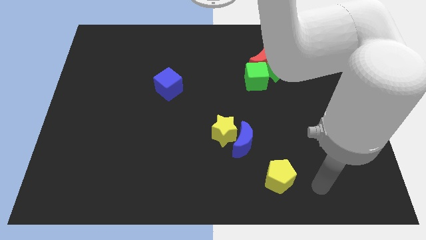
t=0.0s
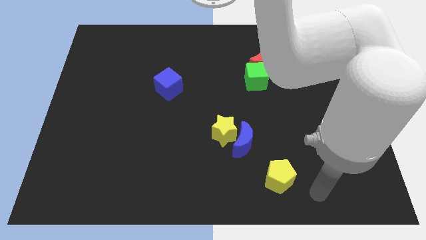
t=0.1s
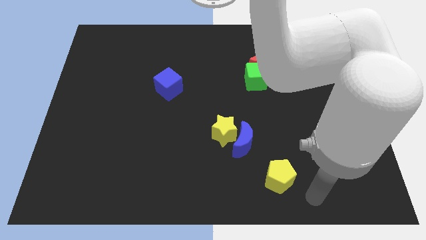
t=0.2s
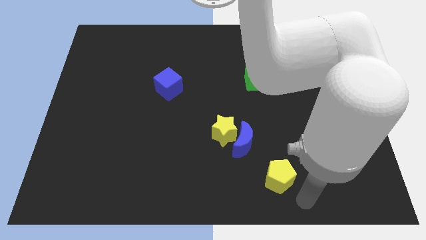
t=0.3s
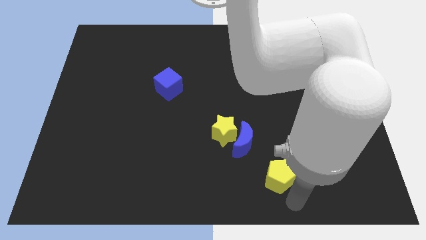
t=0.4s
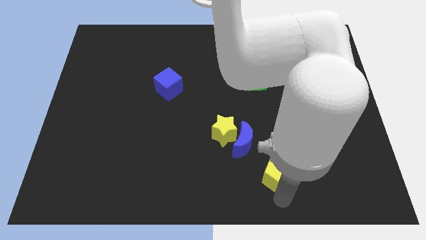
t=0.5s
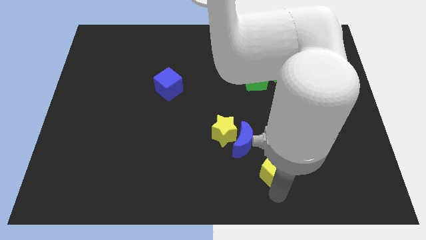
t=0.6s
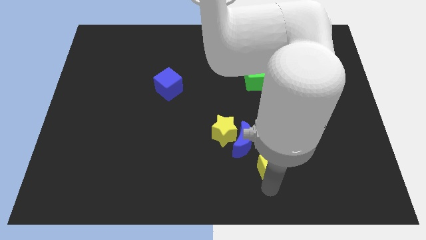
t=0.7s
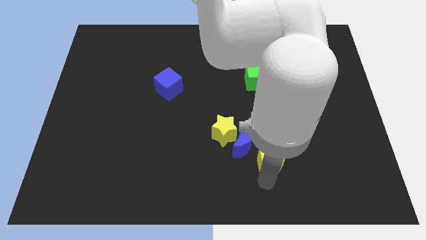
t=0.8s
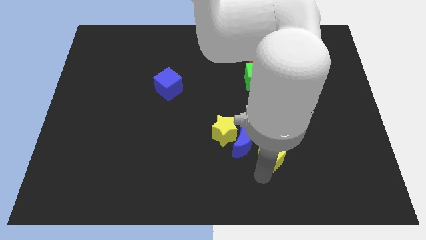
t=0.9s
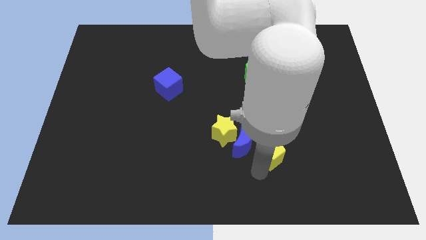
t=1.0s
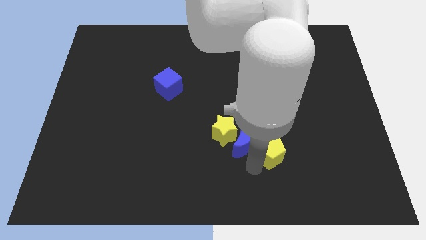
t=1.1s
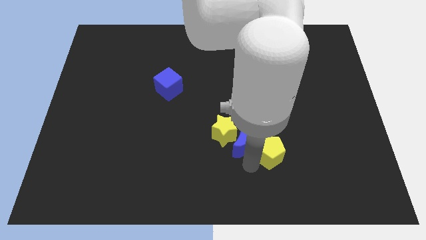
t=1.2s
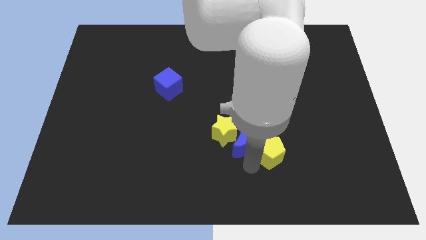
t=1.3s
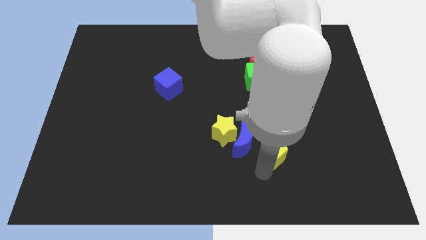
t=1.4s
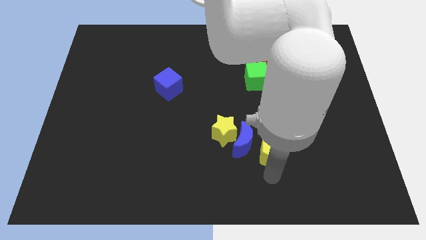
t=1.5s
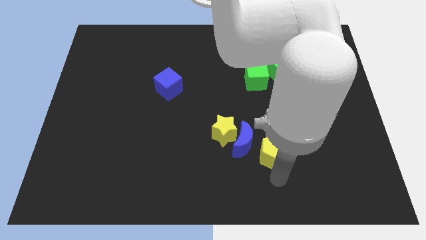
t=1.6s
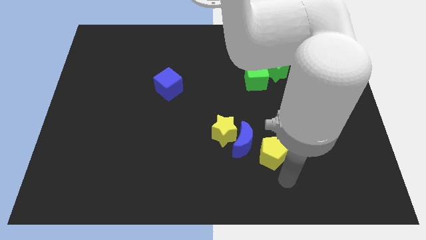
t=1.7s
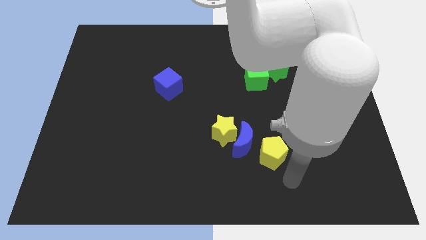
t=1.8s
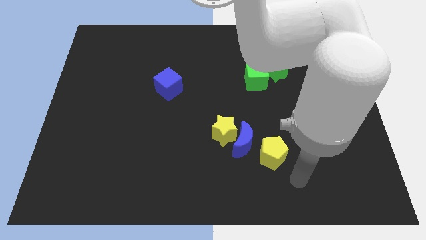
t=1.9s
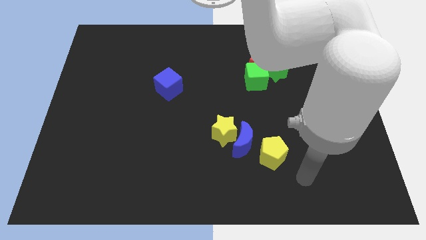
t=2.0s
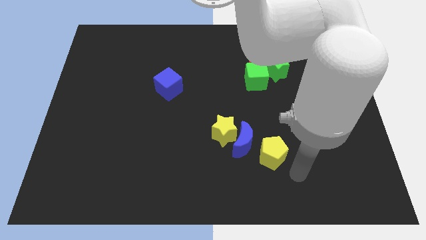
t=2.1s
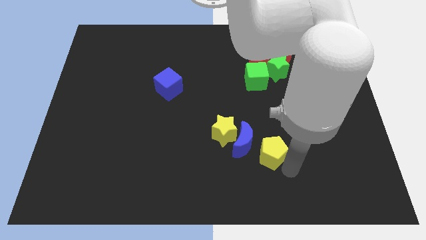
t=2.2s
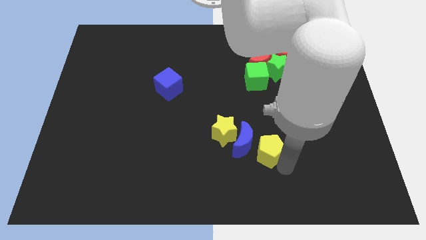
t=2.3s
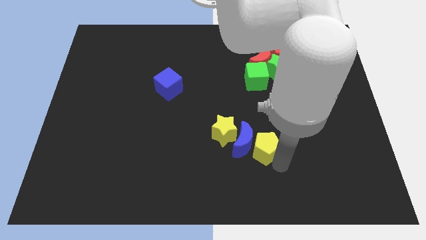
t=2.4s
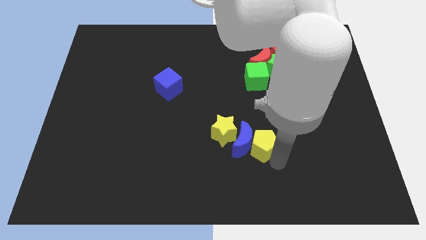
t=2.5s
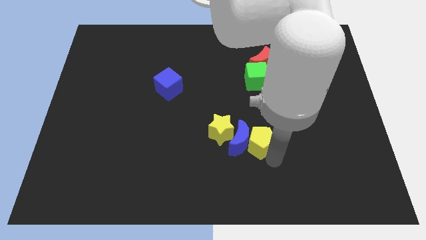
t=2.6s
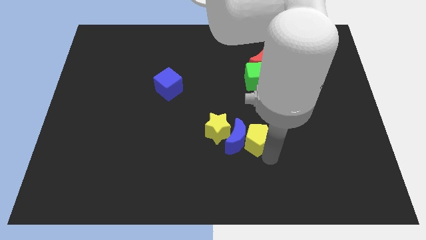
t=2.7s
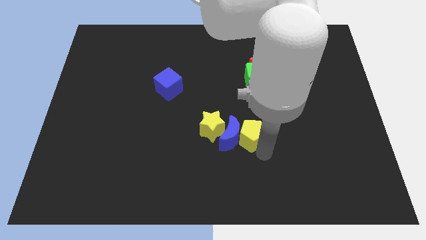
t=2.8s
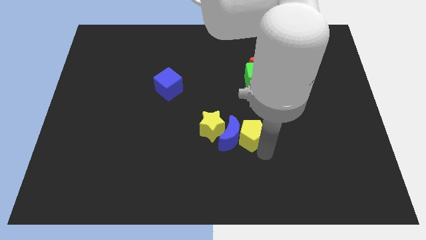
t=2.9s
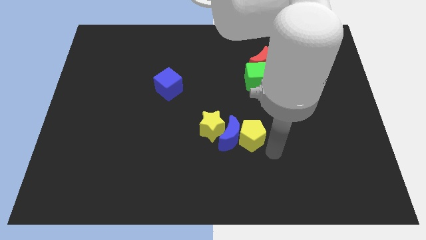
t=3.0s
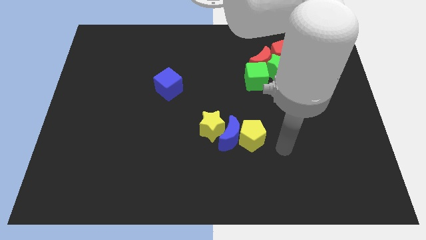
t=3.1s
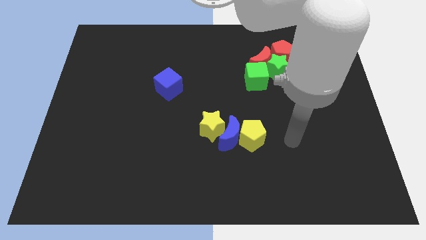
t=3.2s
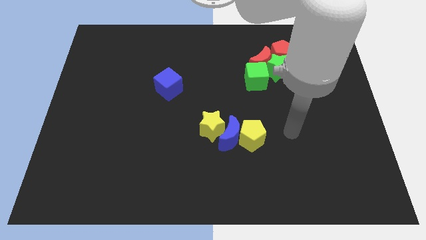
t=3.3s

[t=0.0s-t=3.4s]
move the yellow pentagon towards the center with the help of the blue moon

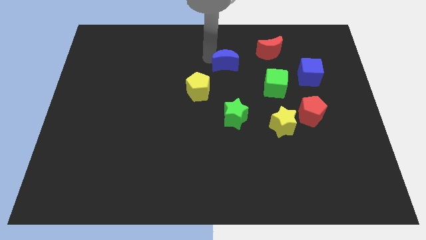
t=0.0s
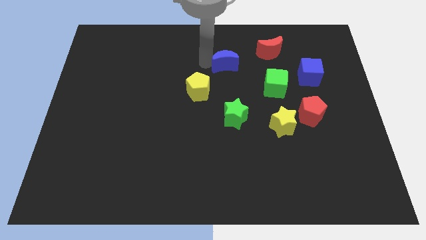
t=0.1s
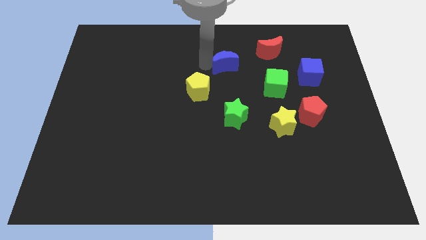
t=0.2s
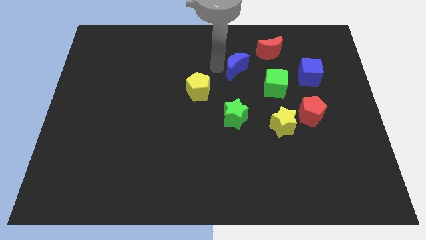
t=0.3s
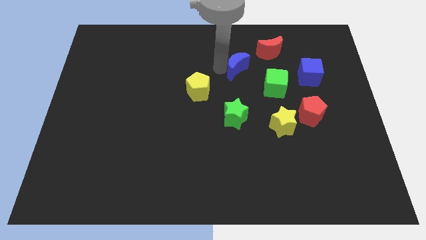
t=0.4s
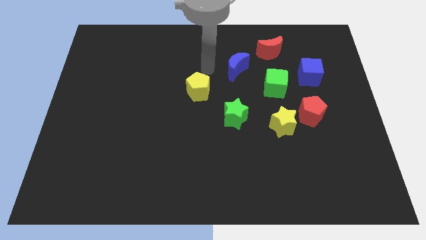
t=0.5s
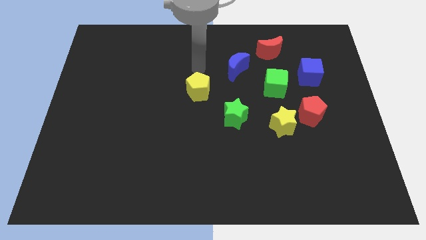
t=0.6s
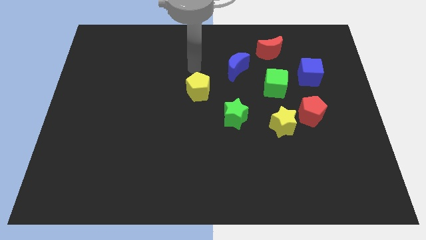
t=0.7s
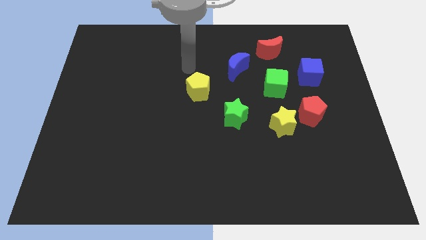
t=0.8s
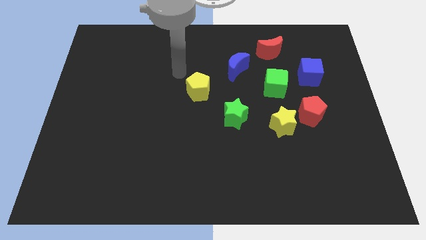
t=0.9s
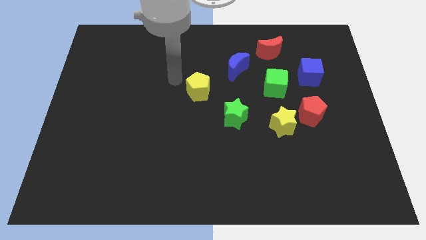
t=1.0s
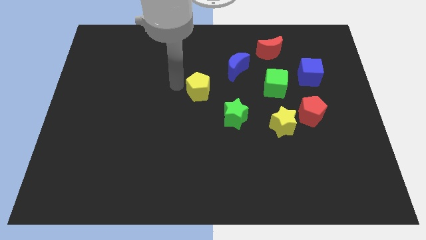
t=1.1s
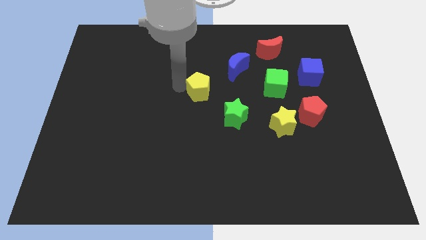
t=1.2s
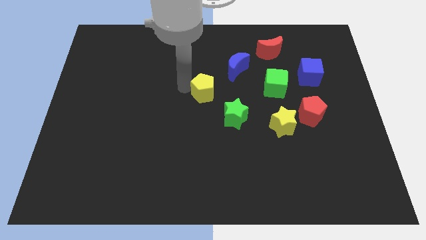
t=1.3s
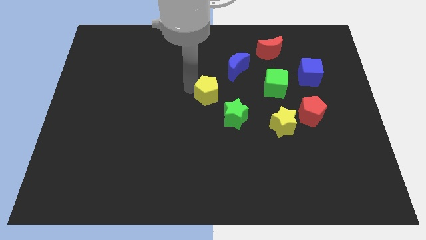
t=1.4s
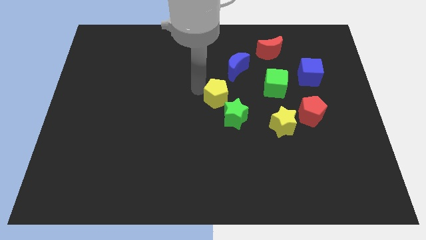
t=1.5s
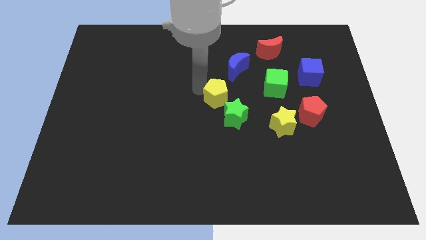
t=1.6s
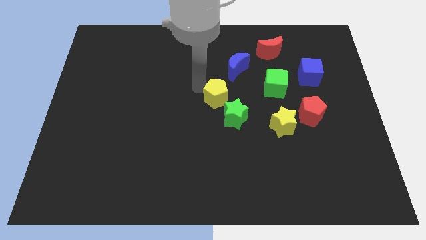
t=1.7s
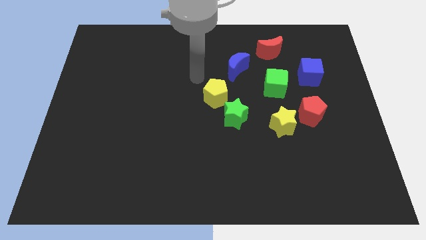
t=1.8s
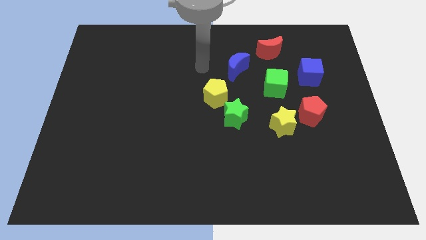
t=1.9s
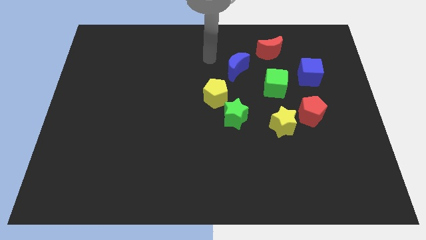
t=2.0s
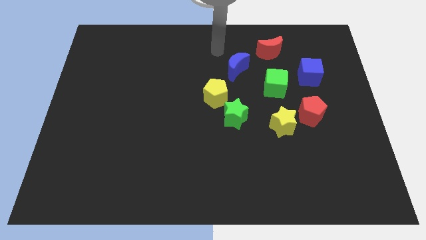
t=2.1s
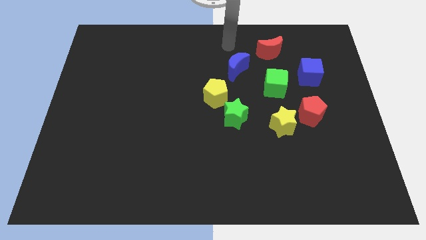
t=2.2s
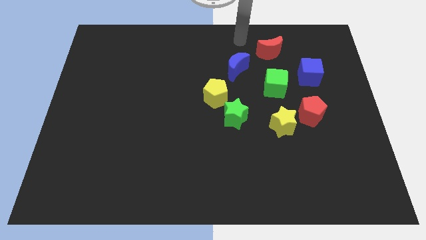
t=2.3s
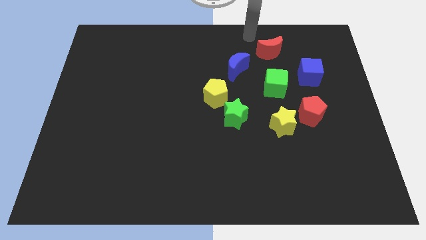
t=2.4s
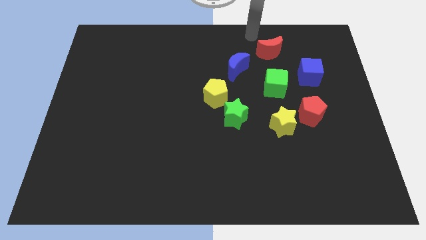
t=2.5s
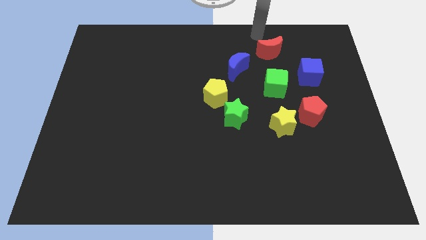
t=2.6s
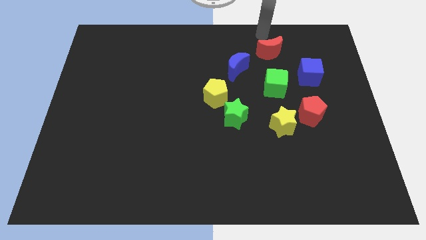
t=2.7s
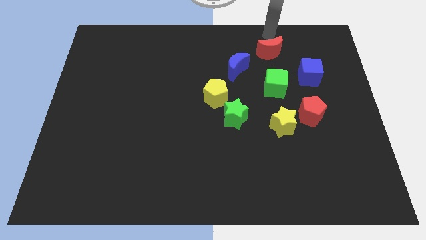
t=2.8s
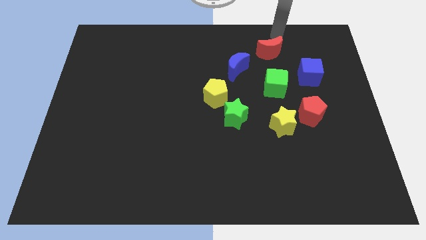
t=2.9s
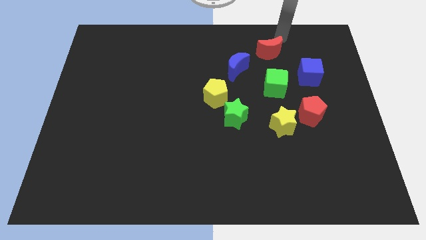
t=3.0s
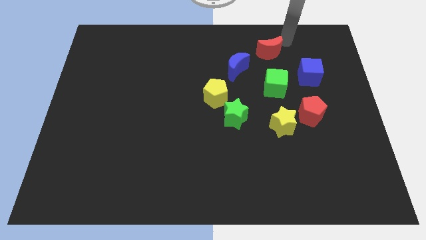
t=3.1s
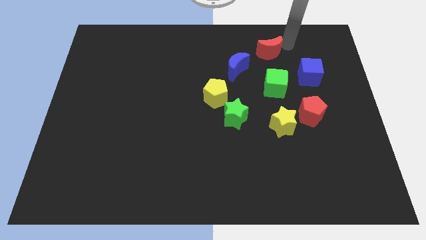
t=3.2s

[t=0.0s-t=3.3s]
adjust blue moon and yellow pentagon

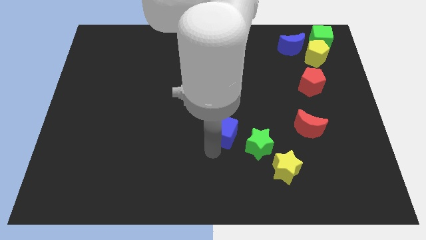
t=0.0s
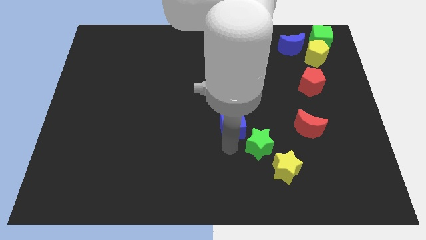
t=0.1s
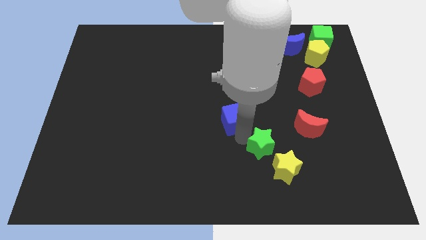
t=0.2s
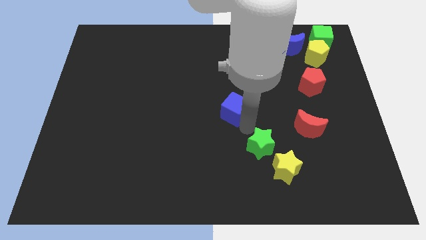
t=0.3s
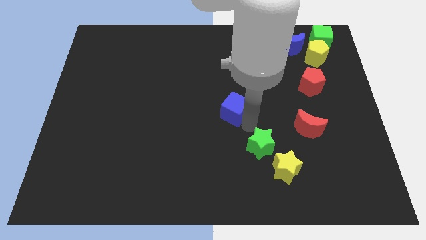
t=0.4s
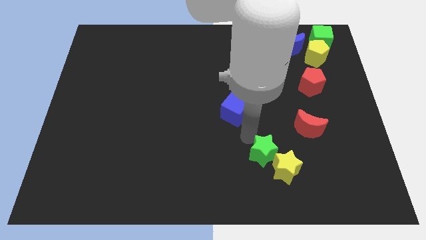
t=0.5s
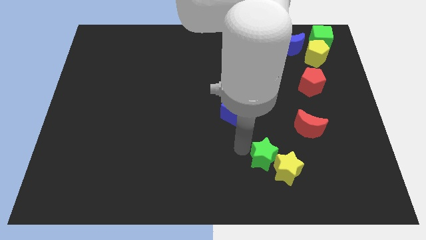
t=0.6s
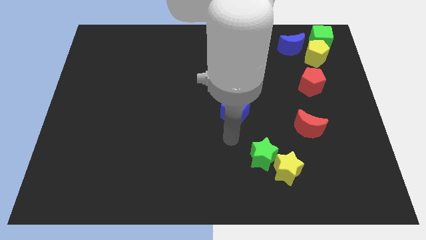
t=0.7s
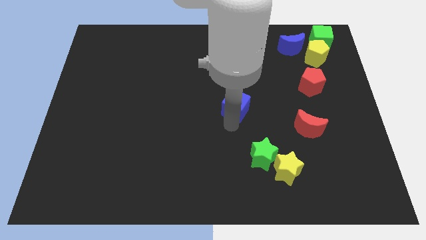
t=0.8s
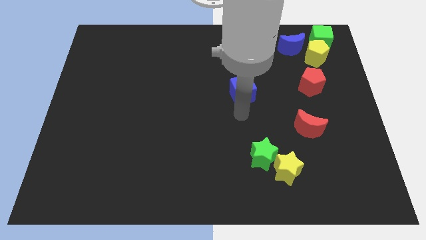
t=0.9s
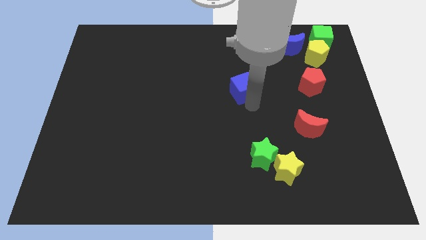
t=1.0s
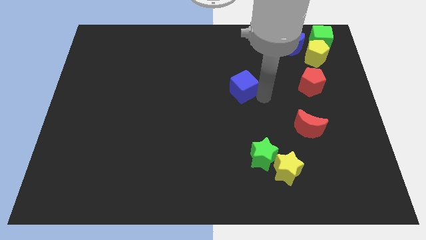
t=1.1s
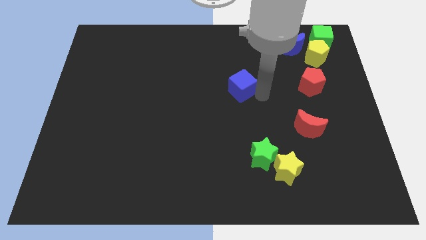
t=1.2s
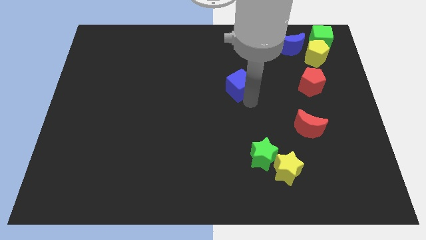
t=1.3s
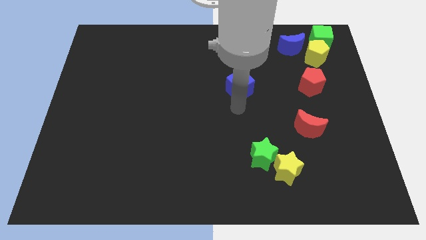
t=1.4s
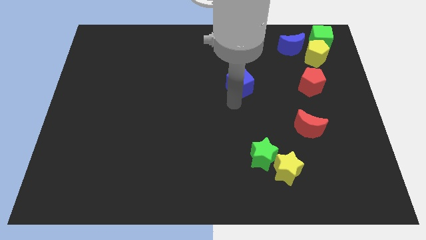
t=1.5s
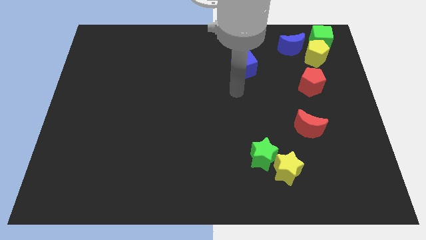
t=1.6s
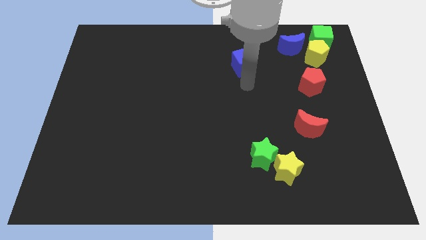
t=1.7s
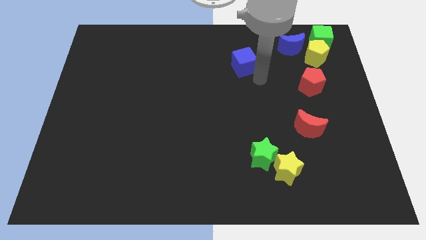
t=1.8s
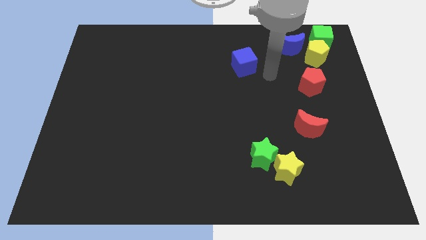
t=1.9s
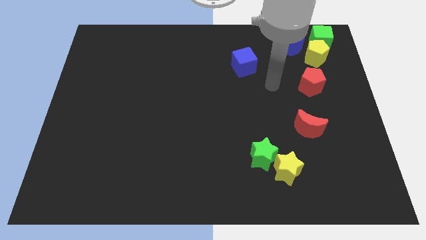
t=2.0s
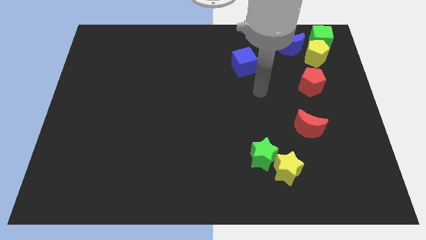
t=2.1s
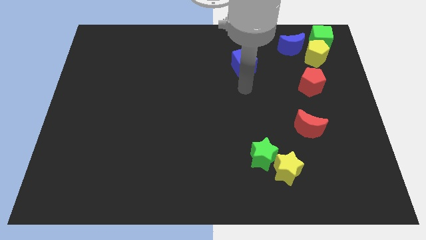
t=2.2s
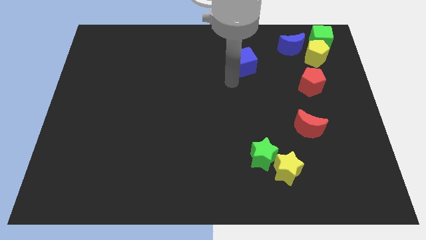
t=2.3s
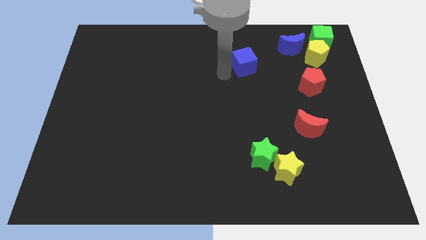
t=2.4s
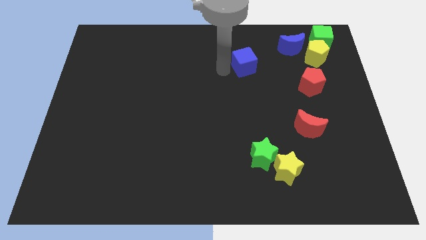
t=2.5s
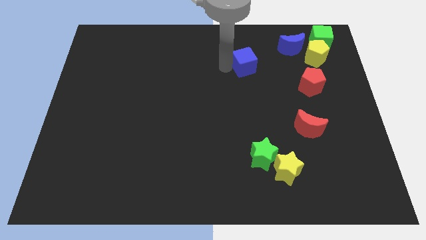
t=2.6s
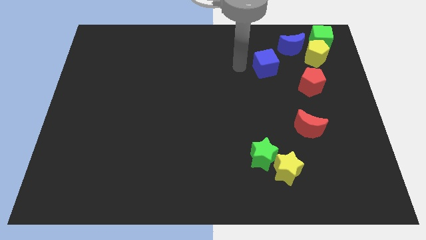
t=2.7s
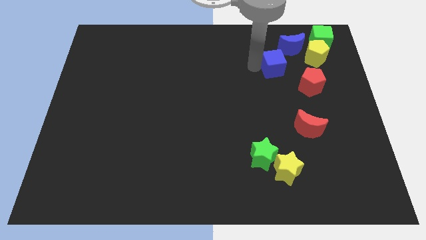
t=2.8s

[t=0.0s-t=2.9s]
separate the blue cube from the green star
